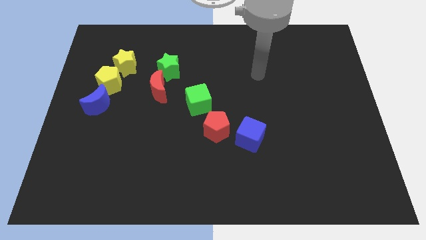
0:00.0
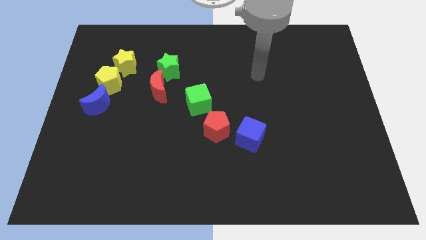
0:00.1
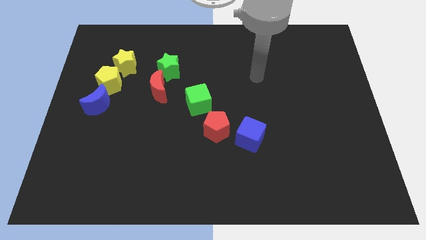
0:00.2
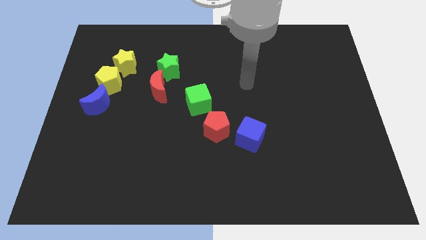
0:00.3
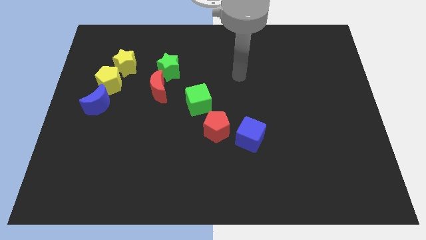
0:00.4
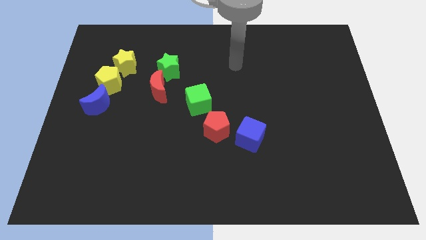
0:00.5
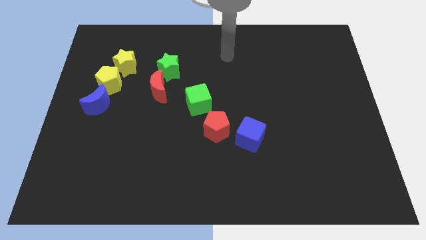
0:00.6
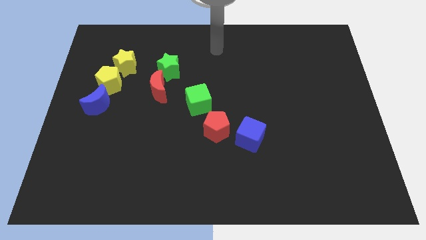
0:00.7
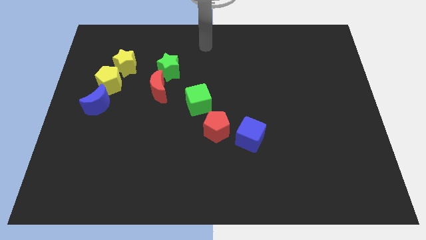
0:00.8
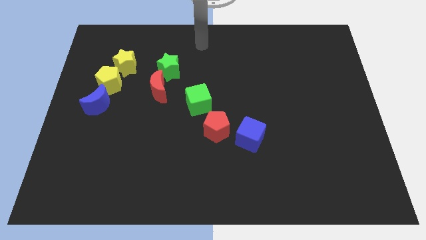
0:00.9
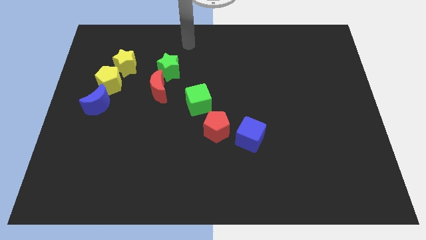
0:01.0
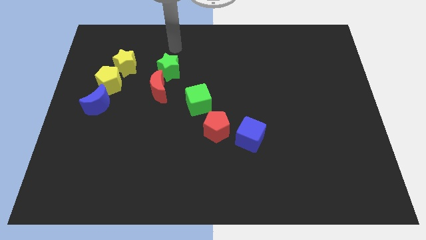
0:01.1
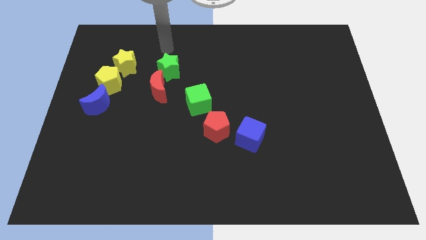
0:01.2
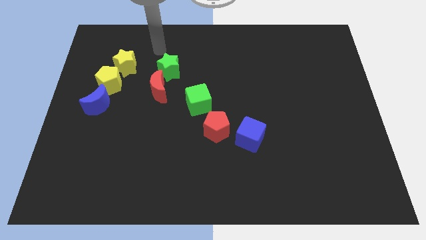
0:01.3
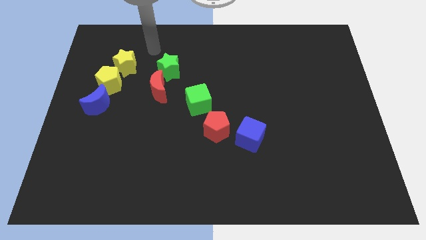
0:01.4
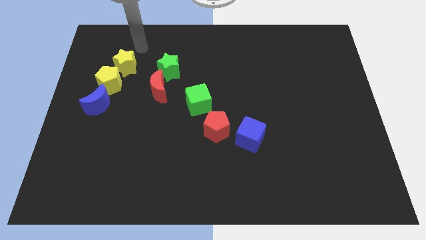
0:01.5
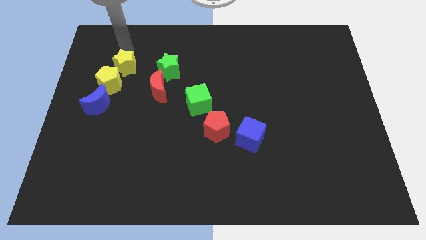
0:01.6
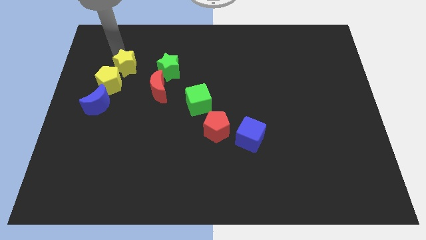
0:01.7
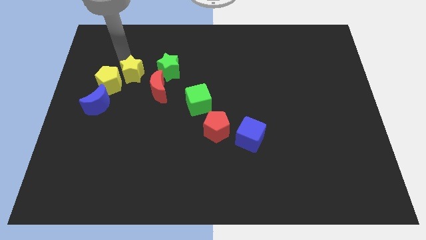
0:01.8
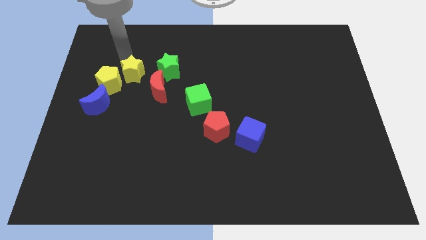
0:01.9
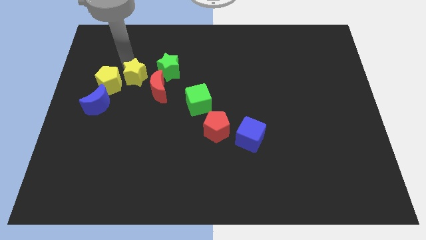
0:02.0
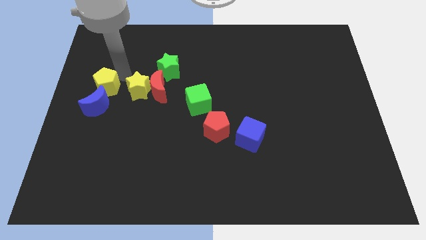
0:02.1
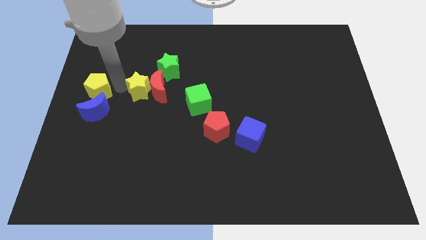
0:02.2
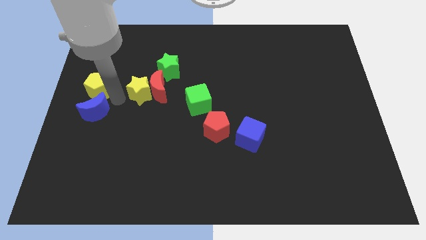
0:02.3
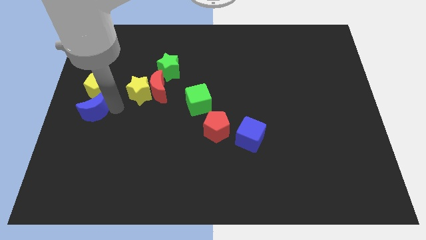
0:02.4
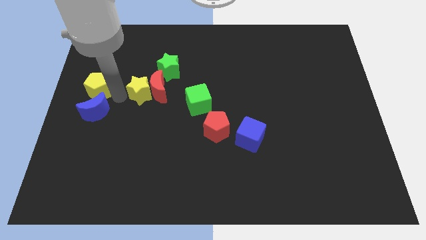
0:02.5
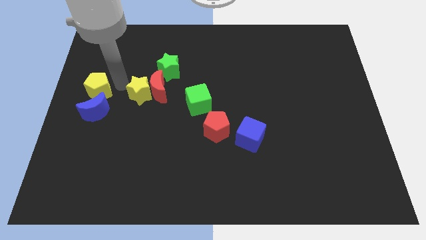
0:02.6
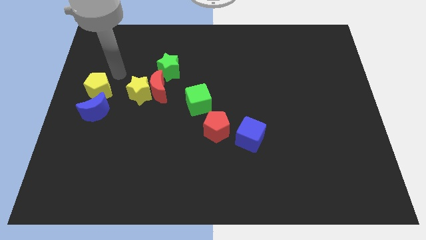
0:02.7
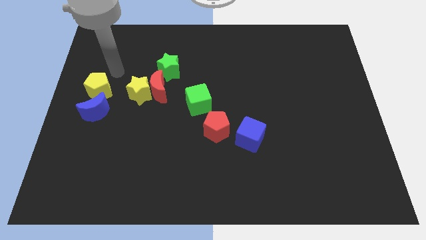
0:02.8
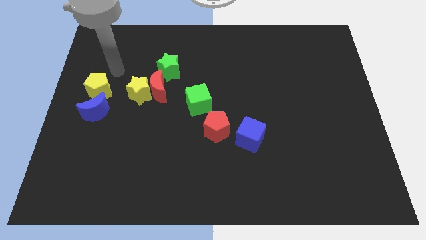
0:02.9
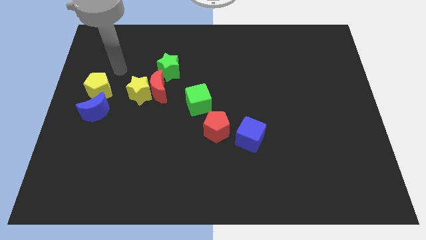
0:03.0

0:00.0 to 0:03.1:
move the yellow blocks horizontally to the left side of the red crescent

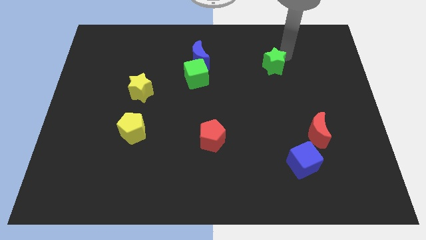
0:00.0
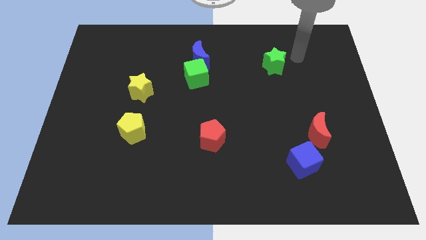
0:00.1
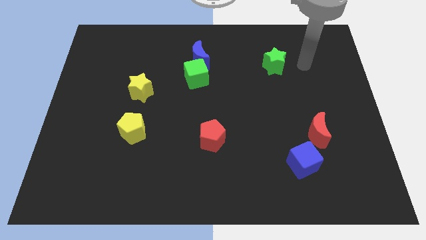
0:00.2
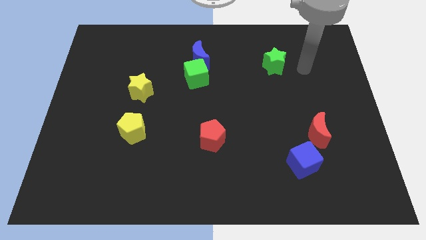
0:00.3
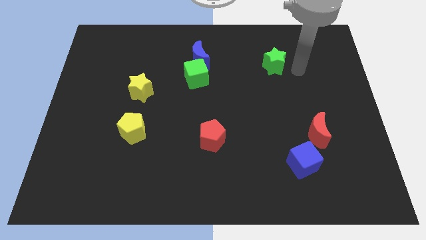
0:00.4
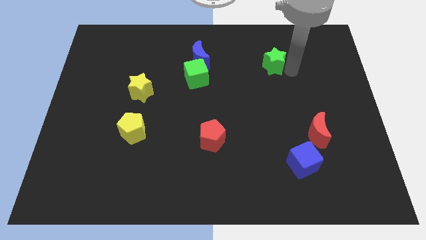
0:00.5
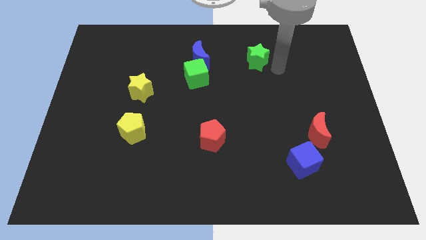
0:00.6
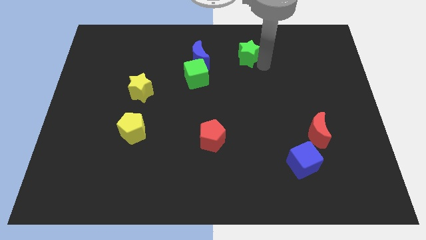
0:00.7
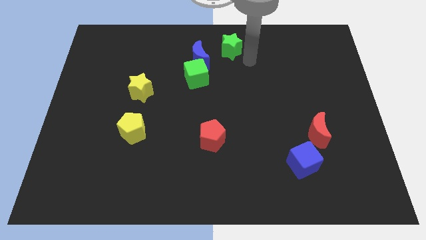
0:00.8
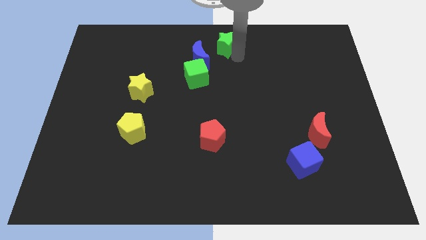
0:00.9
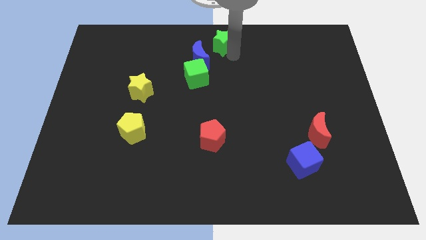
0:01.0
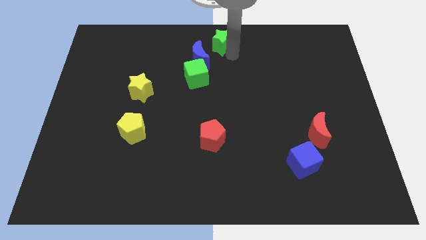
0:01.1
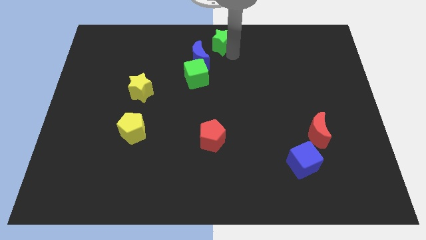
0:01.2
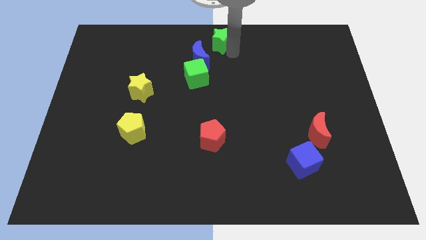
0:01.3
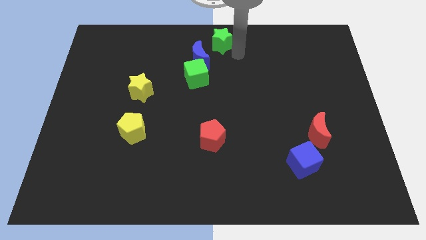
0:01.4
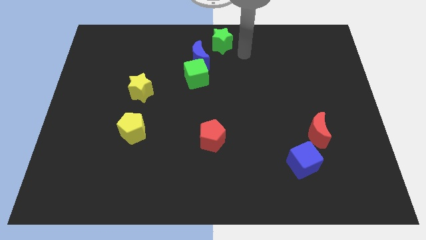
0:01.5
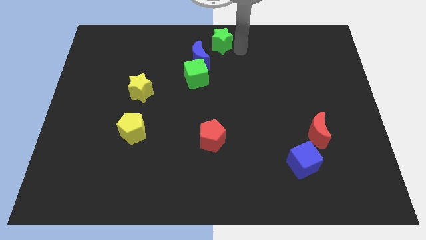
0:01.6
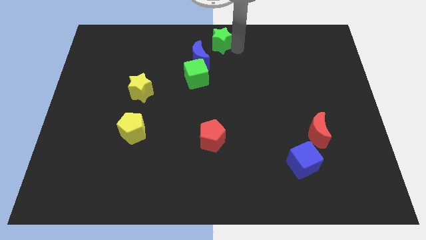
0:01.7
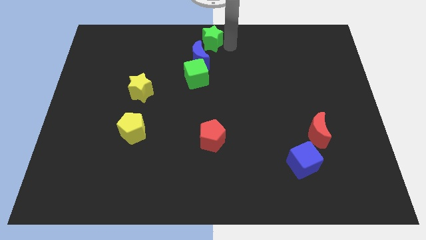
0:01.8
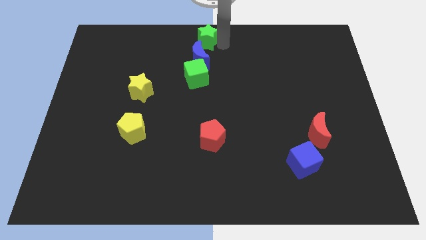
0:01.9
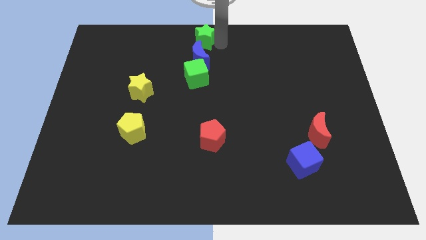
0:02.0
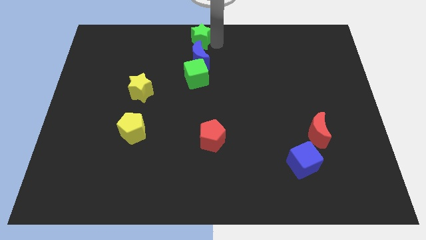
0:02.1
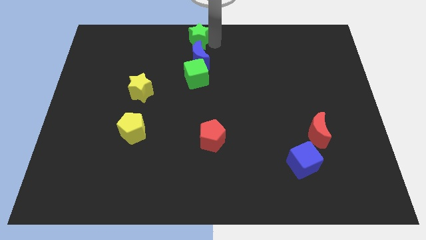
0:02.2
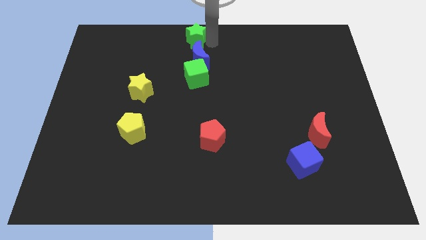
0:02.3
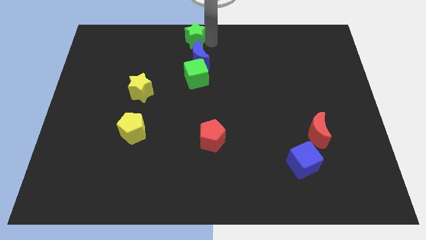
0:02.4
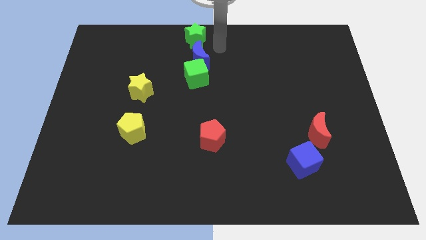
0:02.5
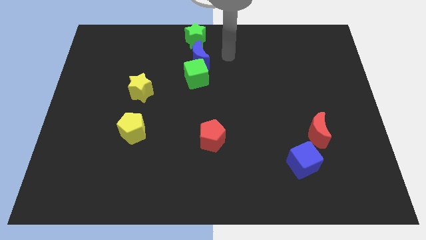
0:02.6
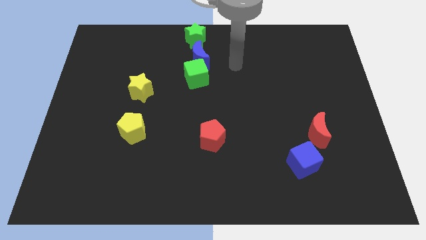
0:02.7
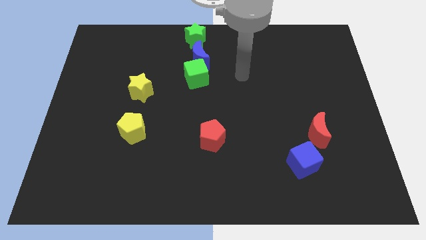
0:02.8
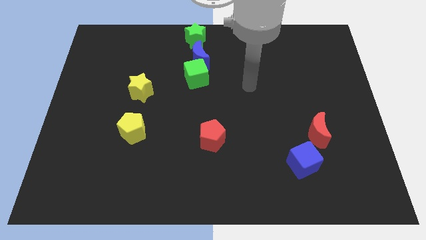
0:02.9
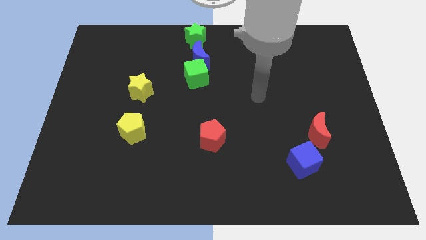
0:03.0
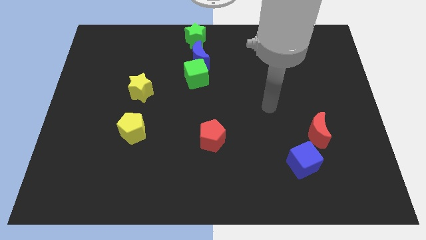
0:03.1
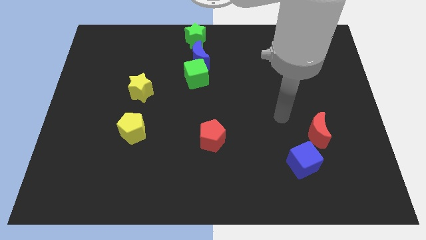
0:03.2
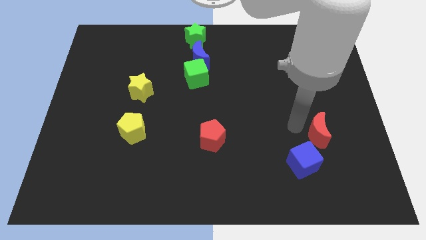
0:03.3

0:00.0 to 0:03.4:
place the green star above the blue moon

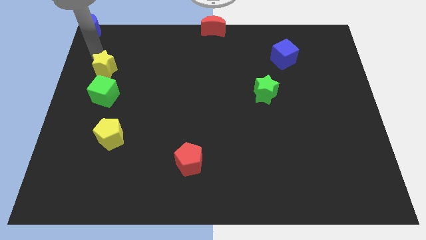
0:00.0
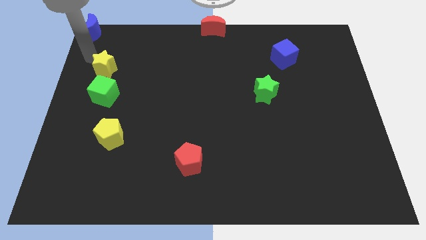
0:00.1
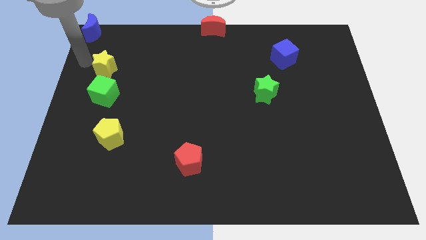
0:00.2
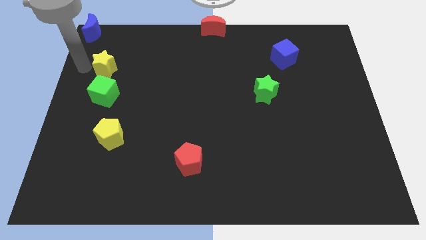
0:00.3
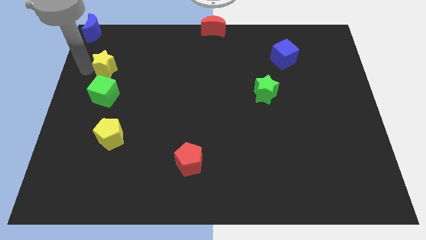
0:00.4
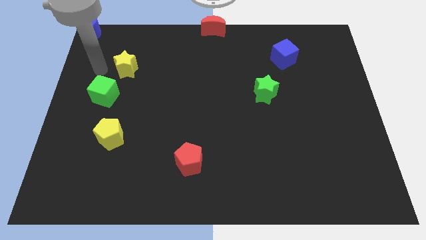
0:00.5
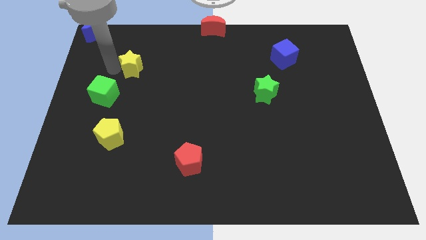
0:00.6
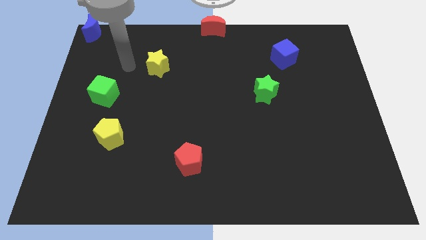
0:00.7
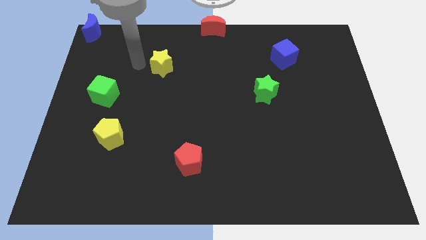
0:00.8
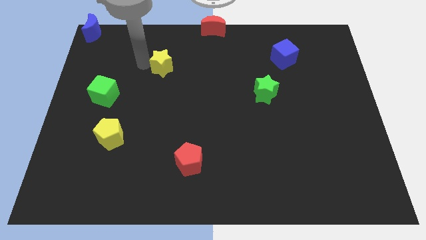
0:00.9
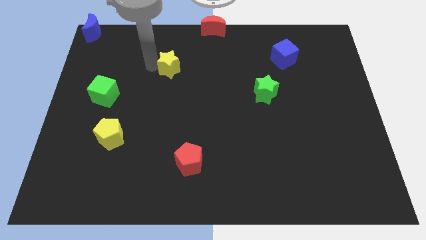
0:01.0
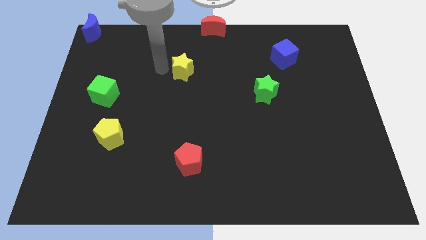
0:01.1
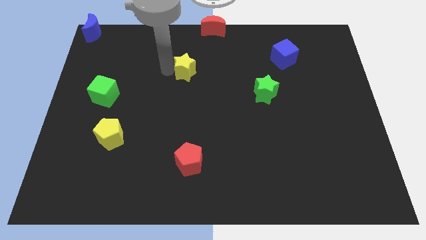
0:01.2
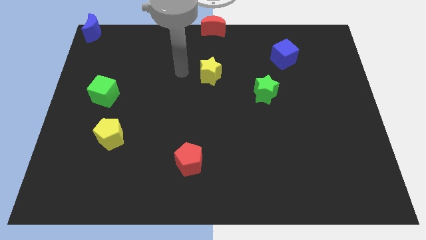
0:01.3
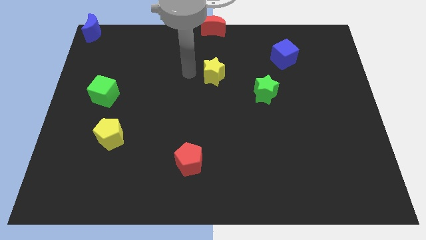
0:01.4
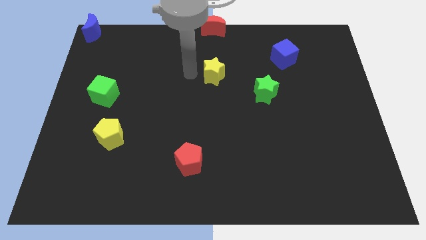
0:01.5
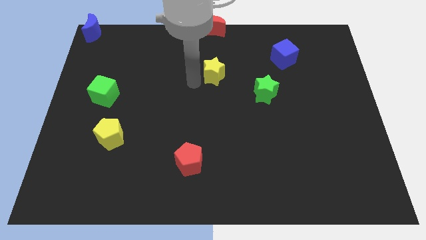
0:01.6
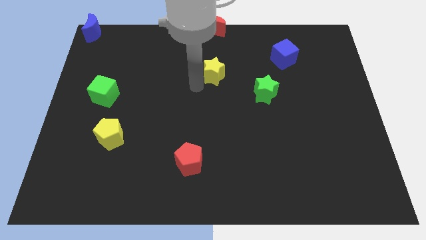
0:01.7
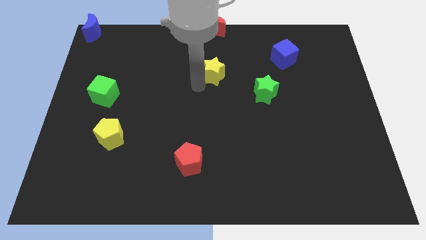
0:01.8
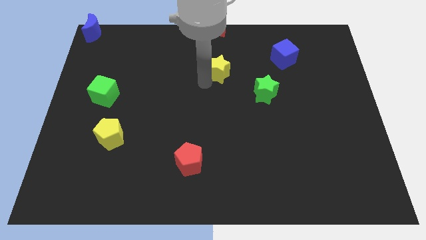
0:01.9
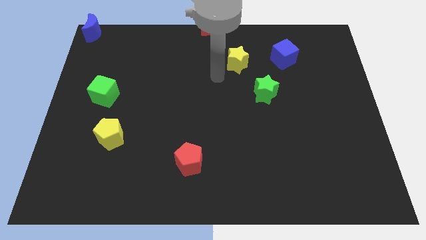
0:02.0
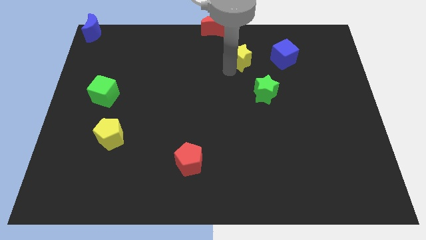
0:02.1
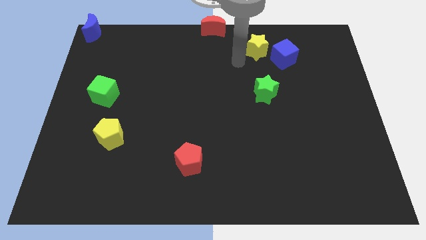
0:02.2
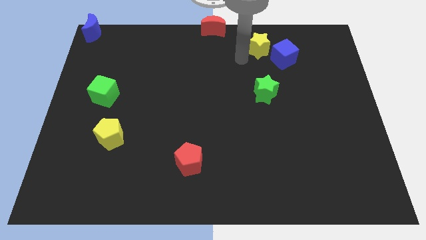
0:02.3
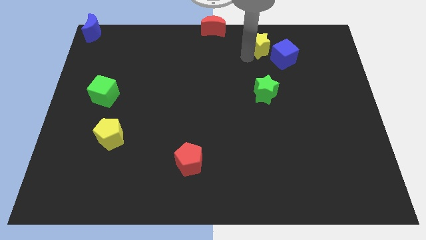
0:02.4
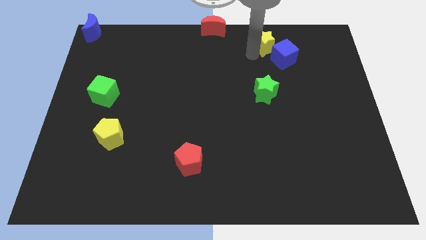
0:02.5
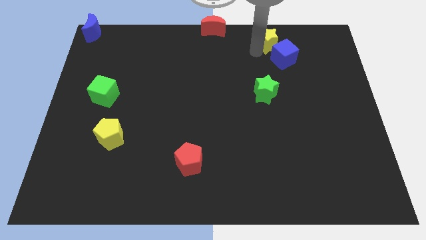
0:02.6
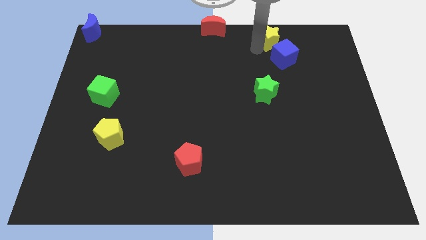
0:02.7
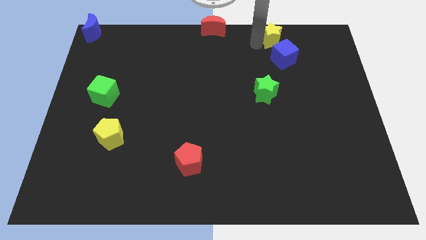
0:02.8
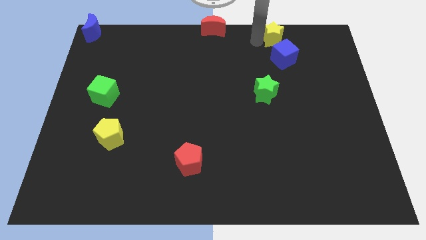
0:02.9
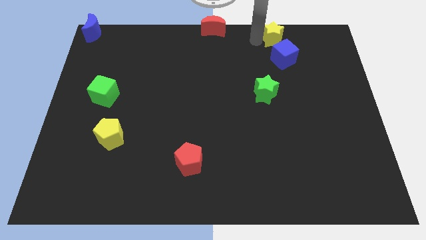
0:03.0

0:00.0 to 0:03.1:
place yellow star above blue cube
